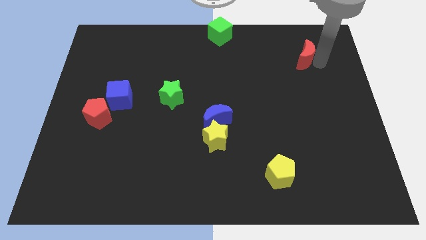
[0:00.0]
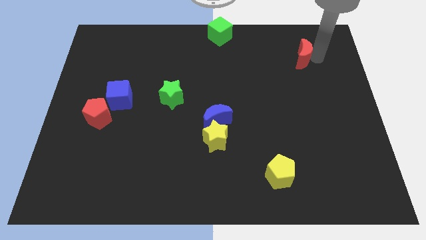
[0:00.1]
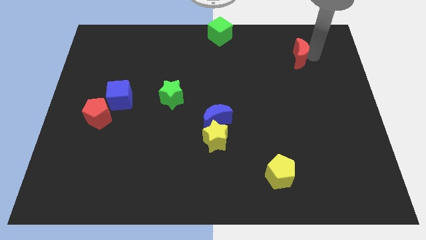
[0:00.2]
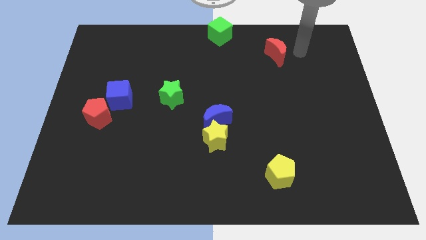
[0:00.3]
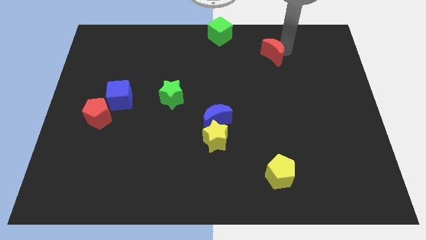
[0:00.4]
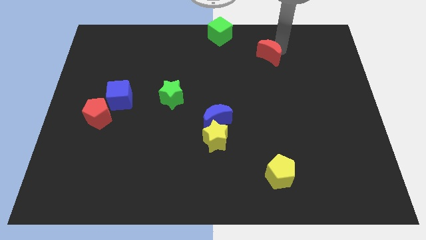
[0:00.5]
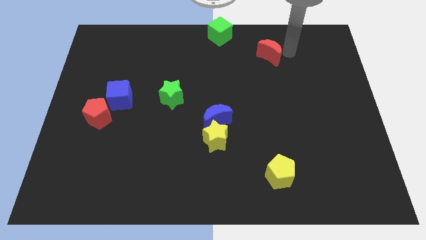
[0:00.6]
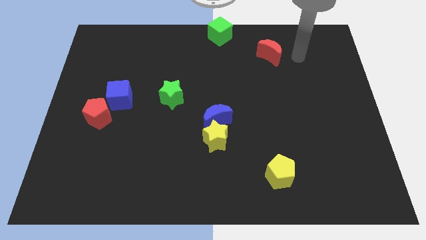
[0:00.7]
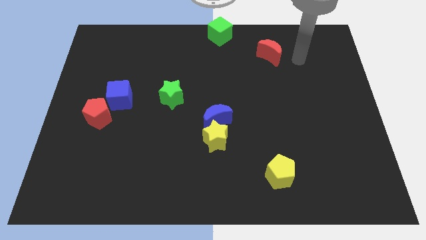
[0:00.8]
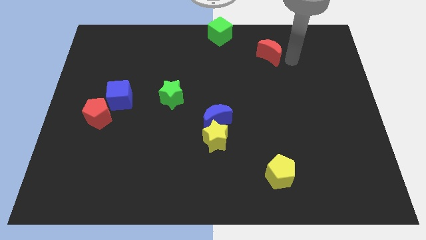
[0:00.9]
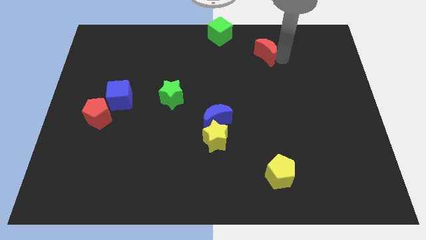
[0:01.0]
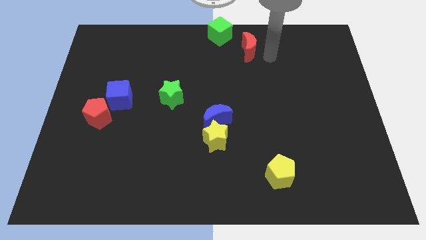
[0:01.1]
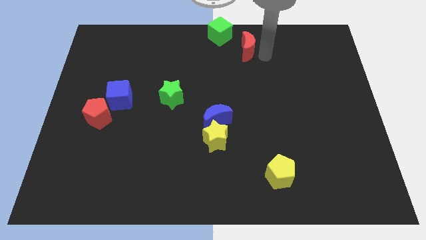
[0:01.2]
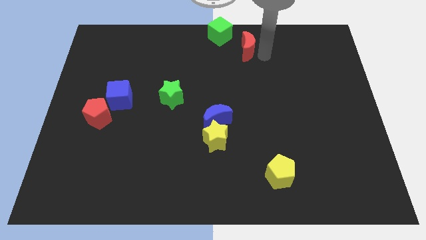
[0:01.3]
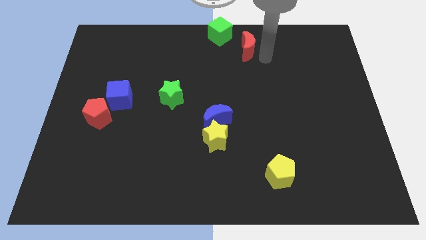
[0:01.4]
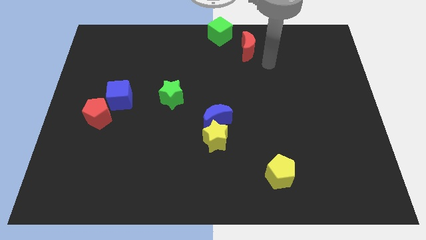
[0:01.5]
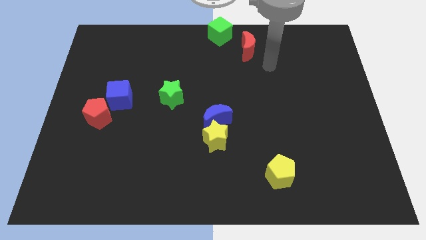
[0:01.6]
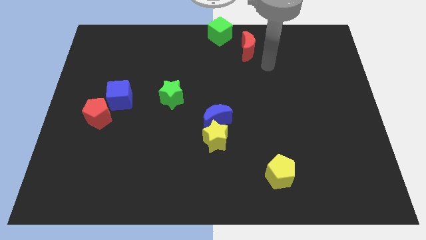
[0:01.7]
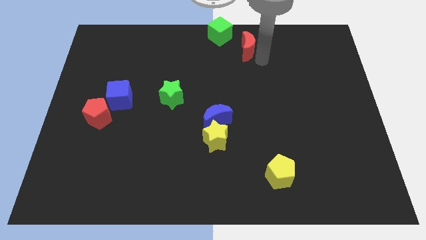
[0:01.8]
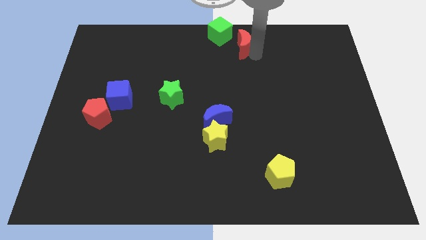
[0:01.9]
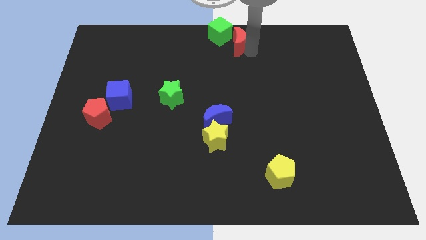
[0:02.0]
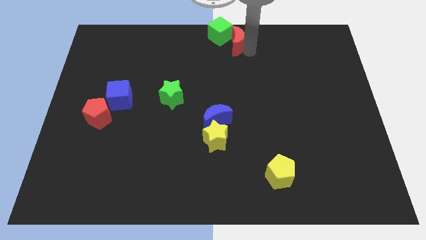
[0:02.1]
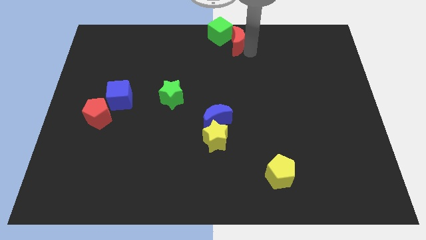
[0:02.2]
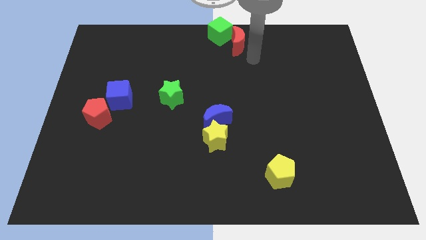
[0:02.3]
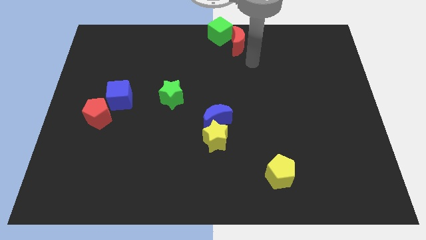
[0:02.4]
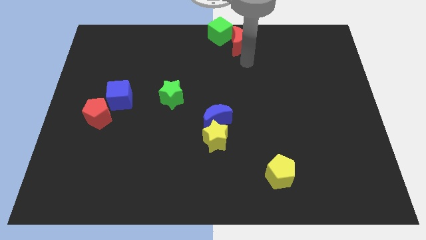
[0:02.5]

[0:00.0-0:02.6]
push the red moon into the green cube

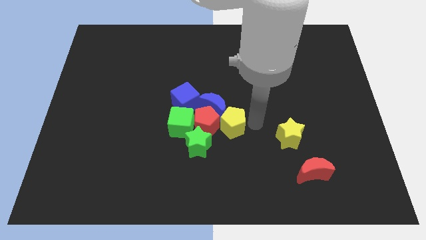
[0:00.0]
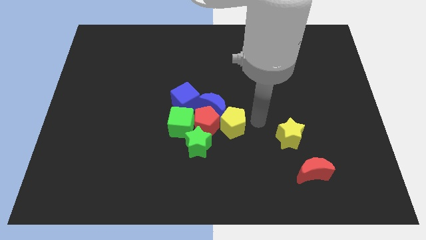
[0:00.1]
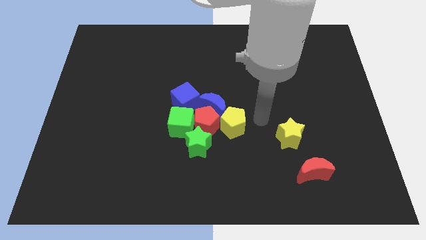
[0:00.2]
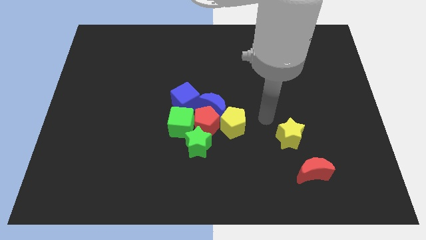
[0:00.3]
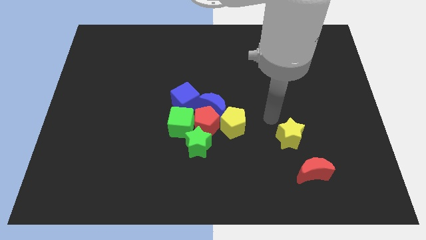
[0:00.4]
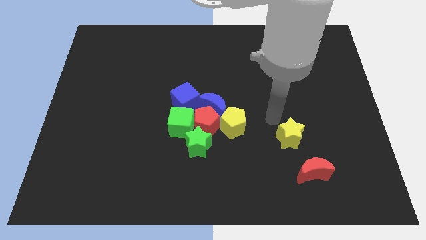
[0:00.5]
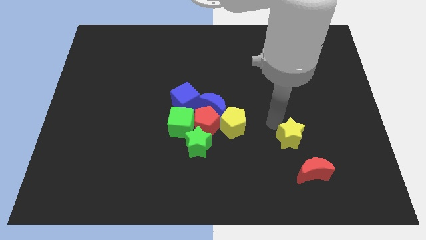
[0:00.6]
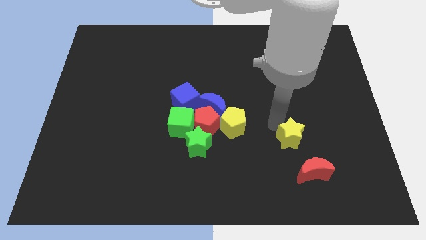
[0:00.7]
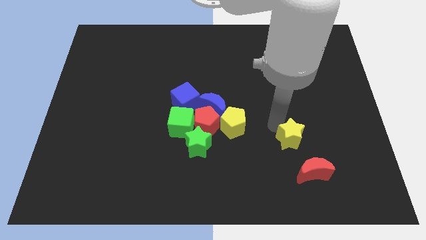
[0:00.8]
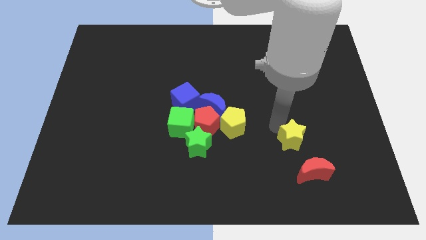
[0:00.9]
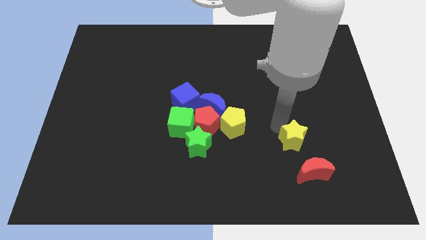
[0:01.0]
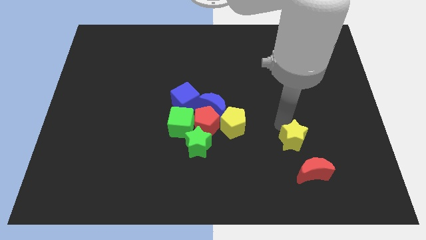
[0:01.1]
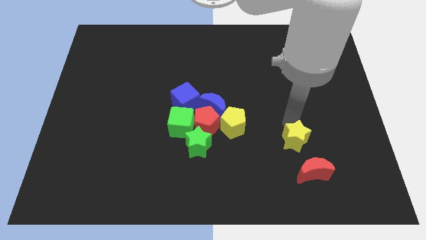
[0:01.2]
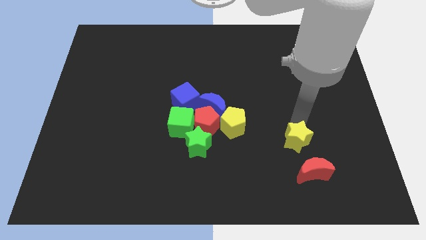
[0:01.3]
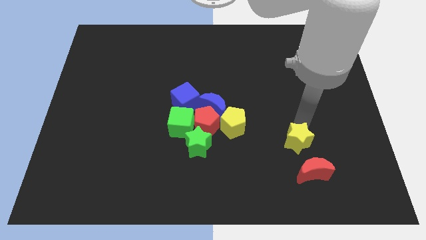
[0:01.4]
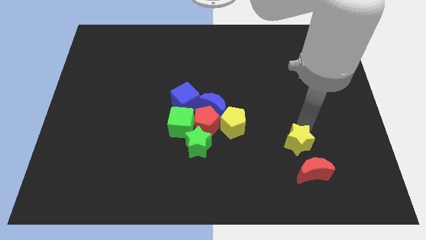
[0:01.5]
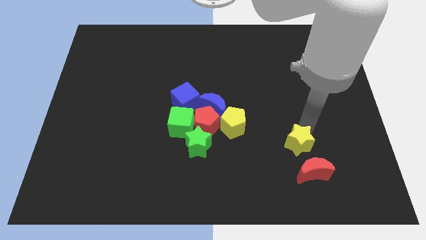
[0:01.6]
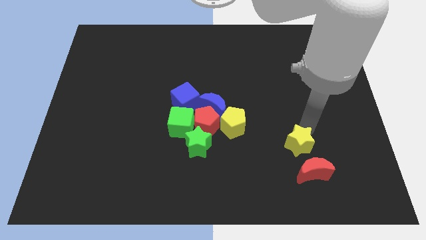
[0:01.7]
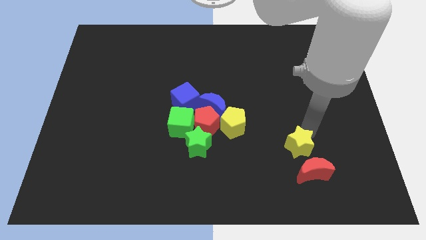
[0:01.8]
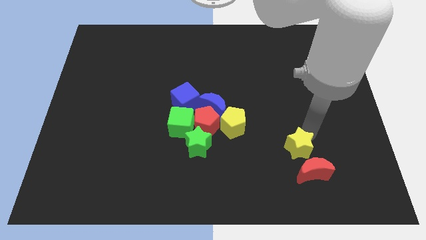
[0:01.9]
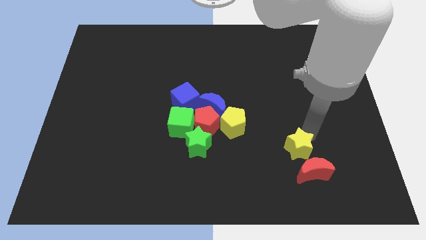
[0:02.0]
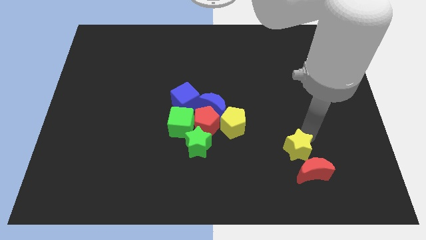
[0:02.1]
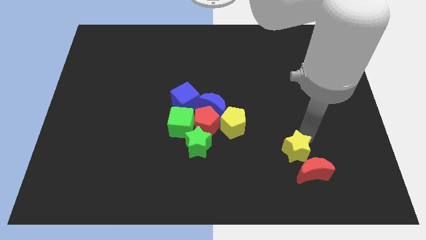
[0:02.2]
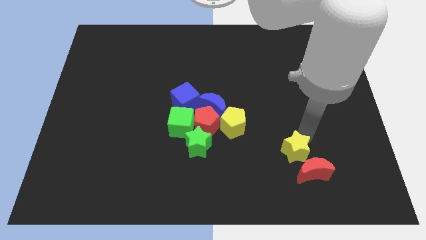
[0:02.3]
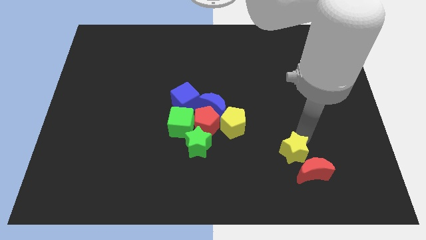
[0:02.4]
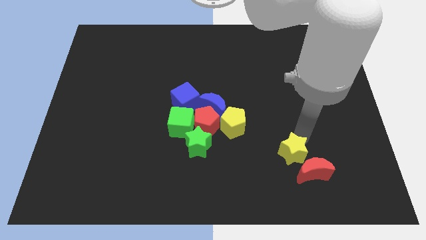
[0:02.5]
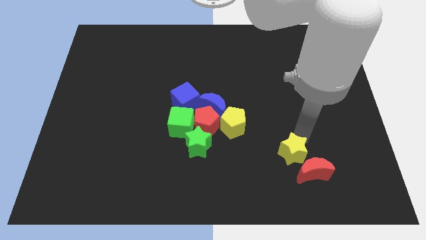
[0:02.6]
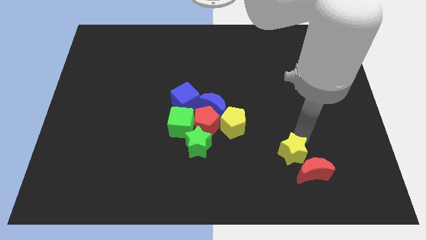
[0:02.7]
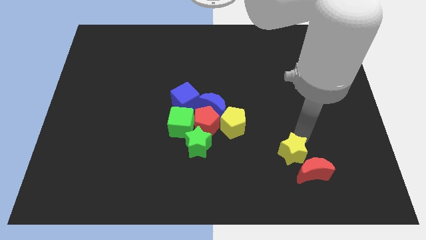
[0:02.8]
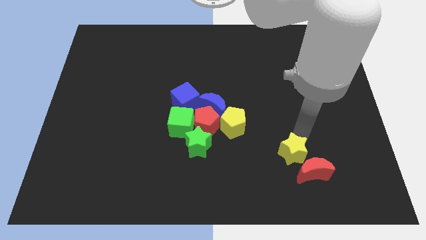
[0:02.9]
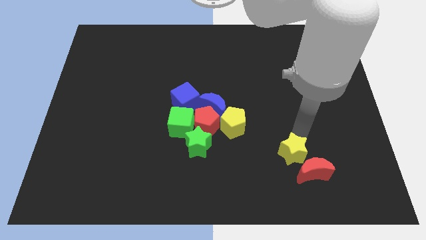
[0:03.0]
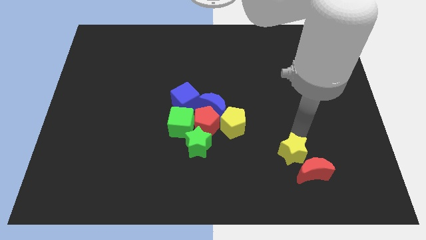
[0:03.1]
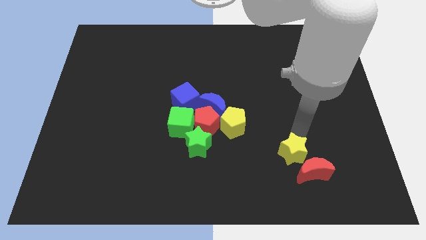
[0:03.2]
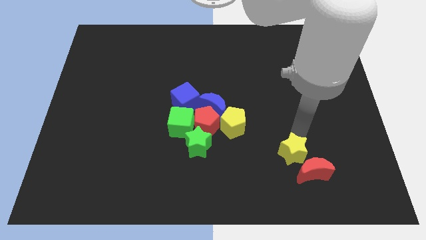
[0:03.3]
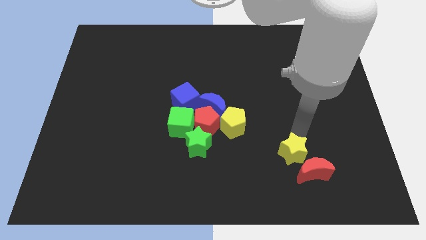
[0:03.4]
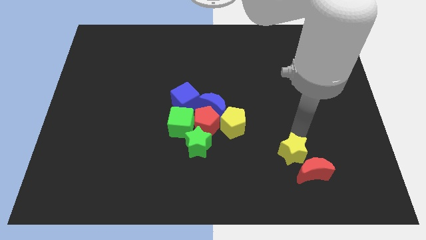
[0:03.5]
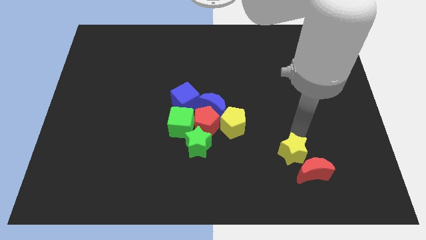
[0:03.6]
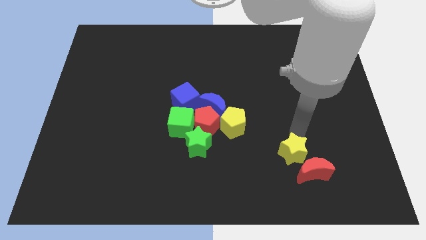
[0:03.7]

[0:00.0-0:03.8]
move the yellow star close to the top side of the red moon

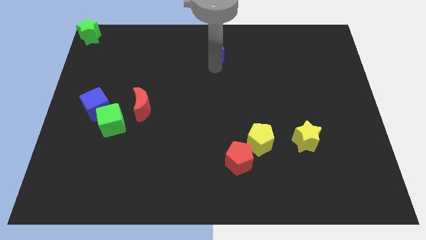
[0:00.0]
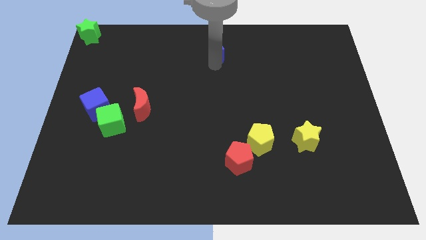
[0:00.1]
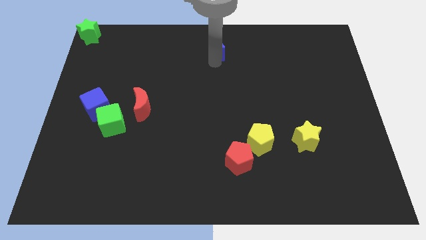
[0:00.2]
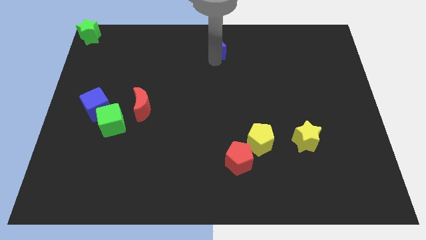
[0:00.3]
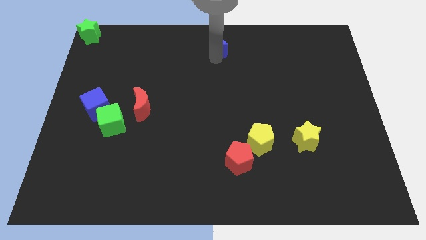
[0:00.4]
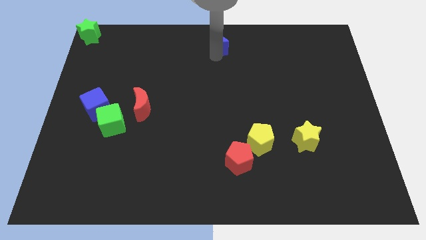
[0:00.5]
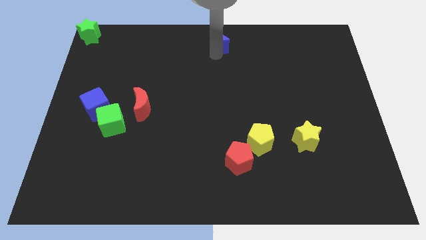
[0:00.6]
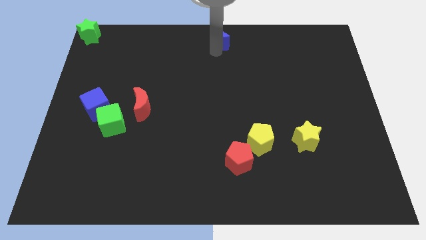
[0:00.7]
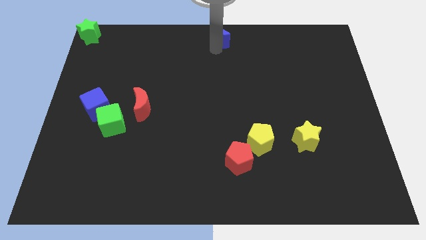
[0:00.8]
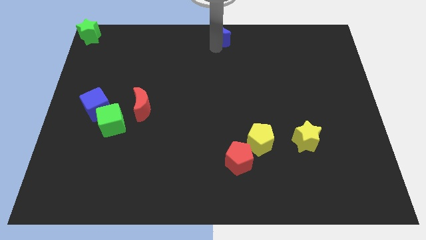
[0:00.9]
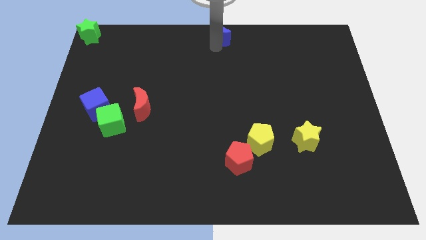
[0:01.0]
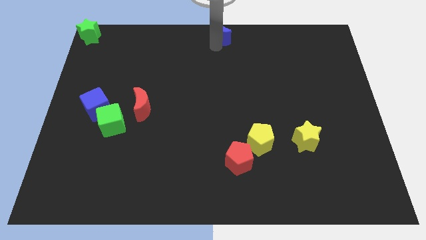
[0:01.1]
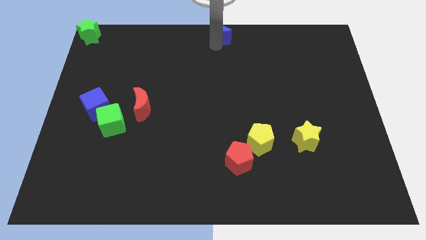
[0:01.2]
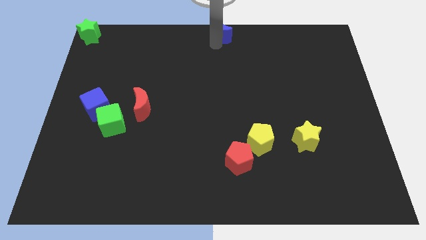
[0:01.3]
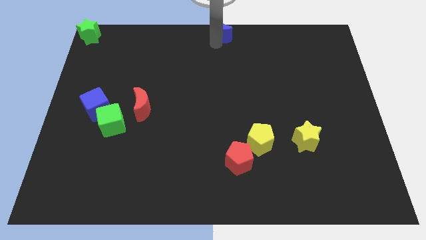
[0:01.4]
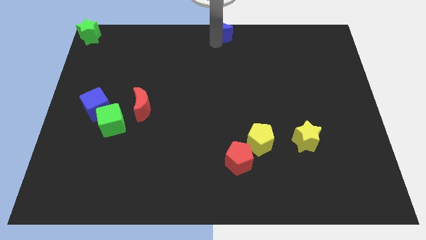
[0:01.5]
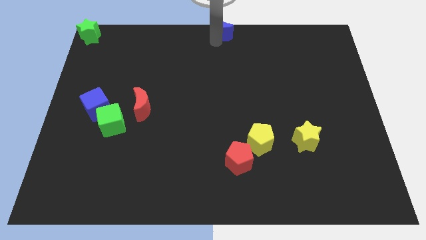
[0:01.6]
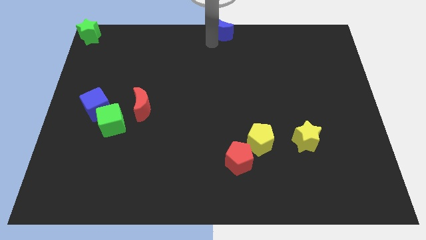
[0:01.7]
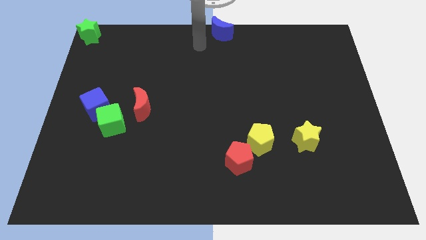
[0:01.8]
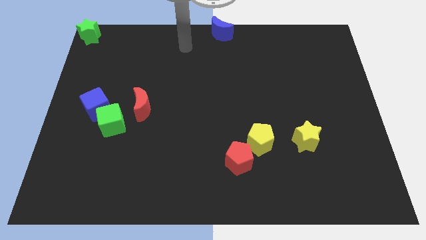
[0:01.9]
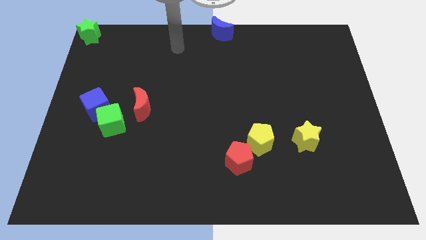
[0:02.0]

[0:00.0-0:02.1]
push blue moon to the top center

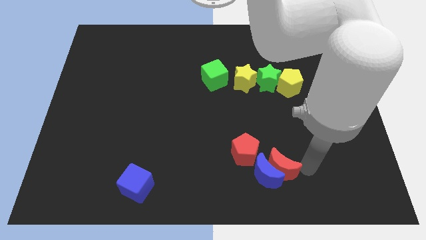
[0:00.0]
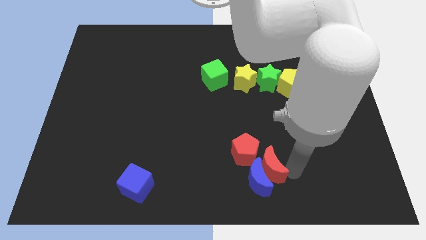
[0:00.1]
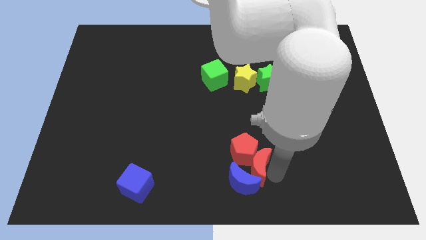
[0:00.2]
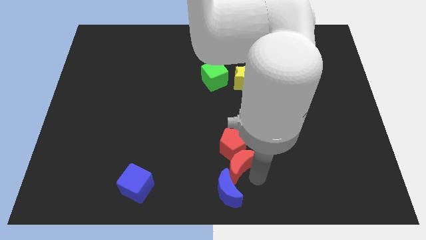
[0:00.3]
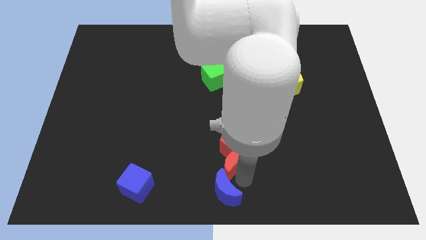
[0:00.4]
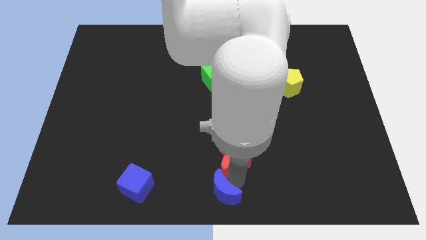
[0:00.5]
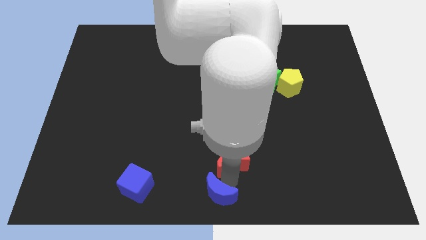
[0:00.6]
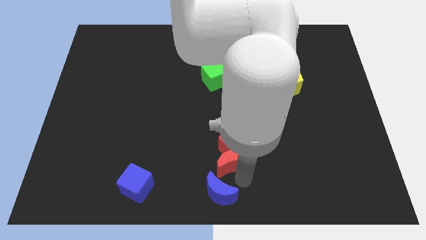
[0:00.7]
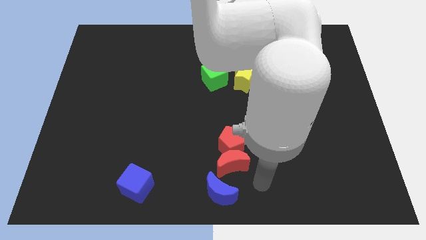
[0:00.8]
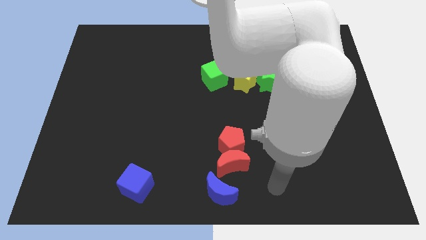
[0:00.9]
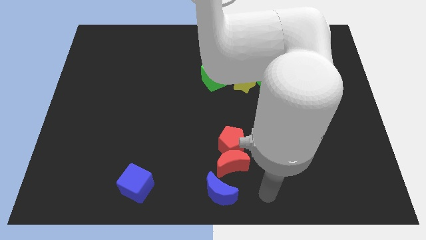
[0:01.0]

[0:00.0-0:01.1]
make the red crescent to touch the red pentagon
